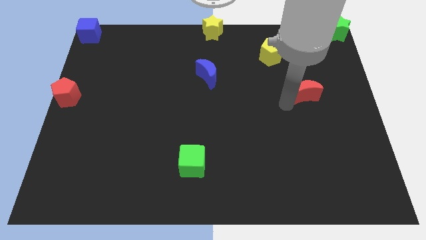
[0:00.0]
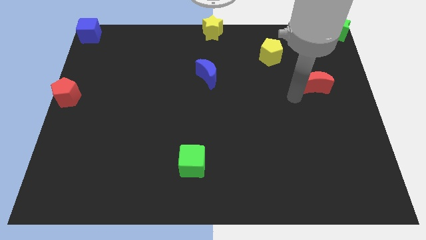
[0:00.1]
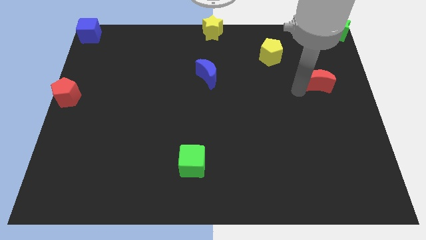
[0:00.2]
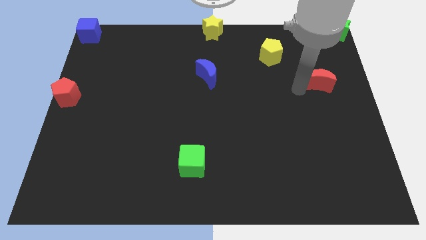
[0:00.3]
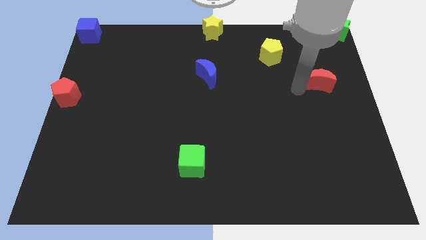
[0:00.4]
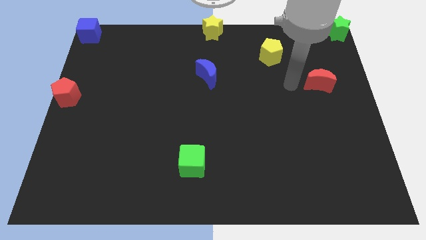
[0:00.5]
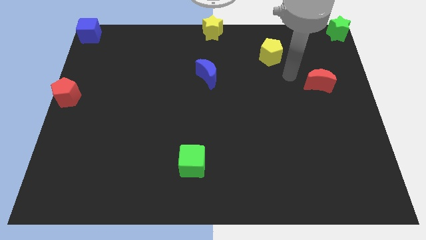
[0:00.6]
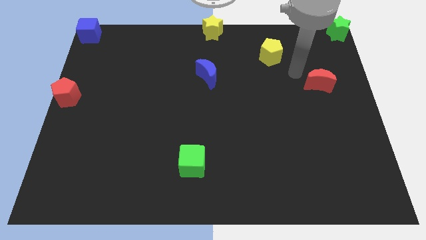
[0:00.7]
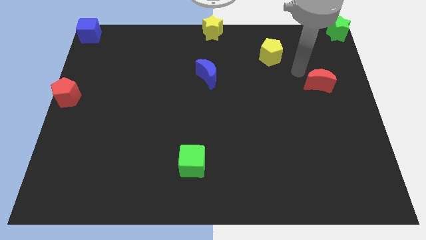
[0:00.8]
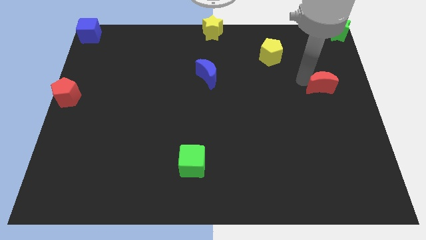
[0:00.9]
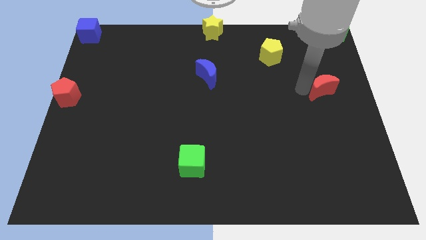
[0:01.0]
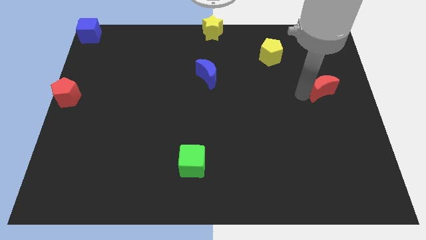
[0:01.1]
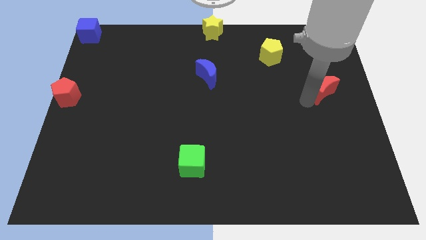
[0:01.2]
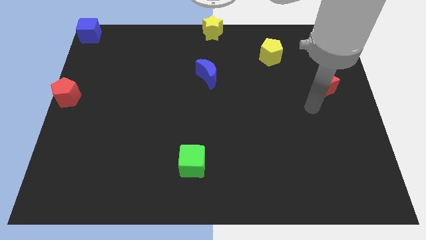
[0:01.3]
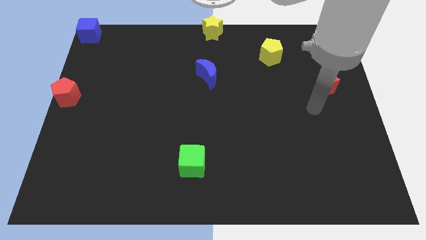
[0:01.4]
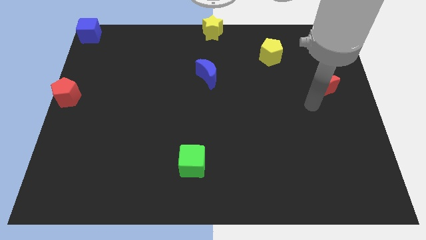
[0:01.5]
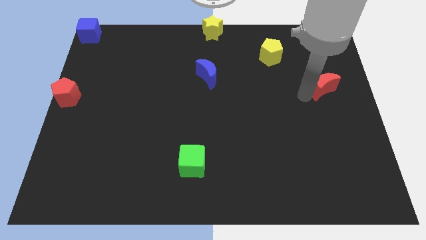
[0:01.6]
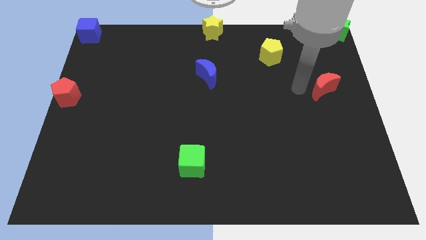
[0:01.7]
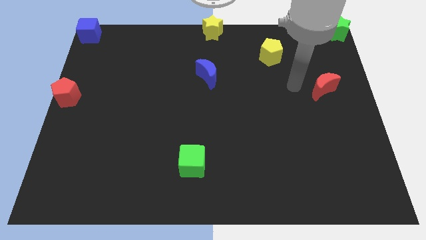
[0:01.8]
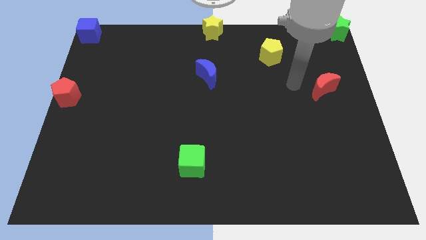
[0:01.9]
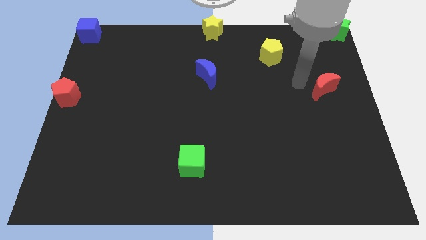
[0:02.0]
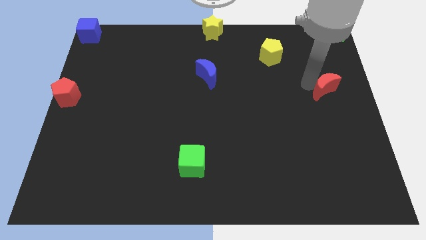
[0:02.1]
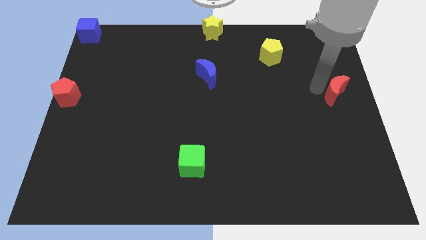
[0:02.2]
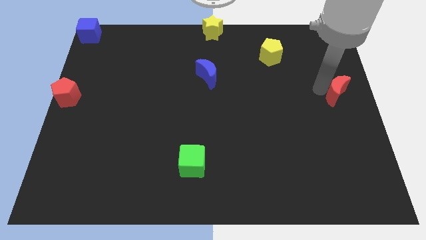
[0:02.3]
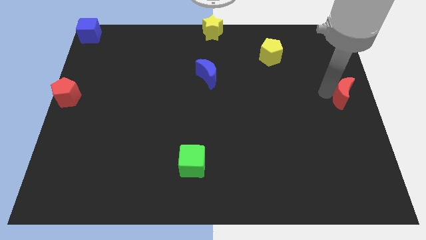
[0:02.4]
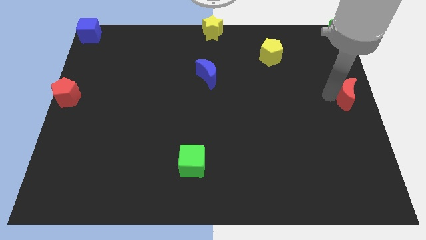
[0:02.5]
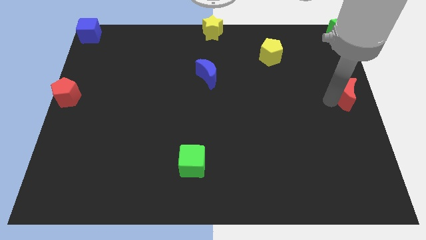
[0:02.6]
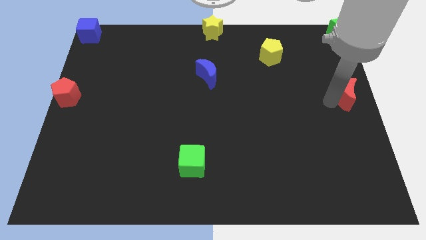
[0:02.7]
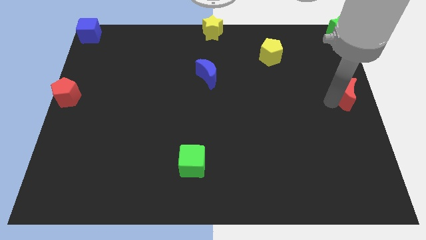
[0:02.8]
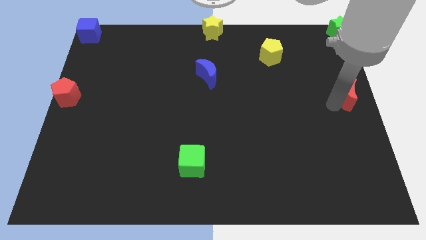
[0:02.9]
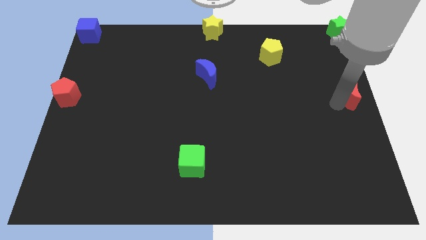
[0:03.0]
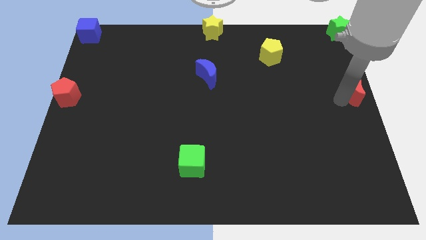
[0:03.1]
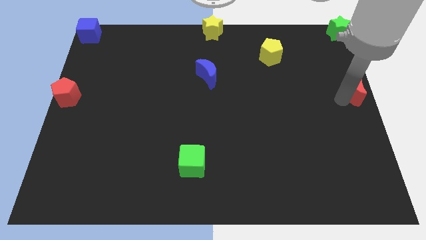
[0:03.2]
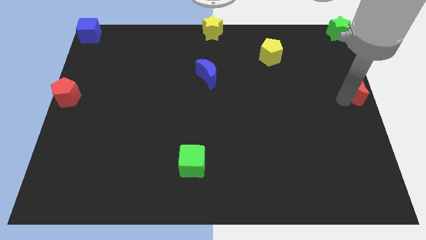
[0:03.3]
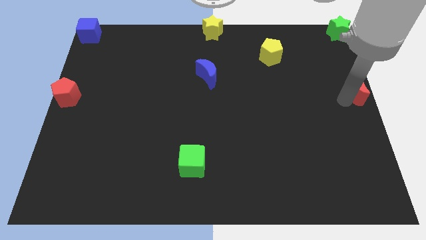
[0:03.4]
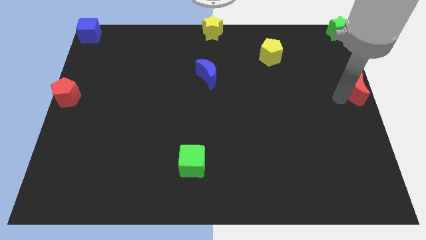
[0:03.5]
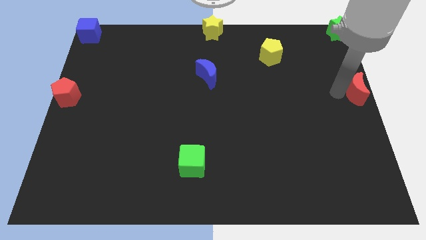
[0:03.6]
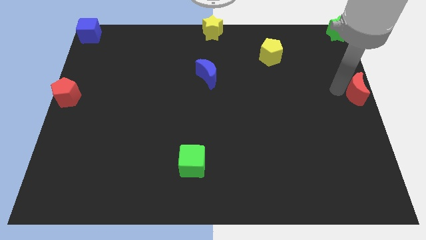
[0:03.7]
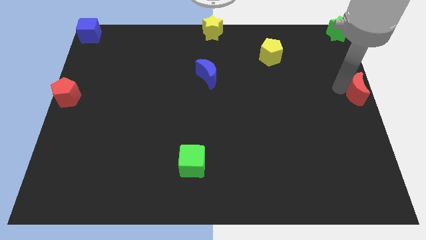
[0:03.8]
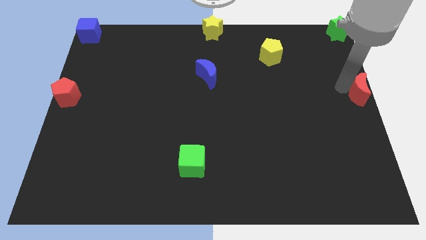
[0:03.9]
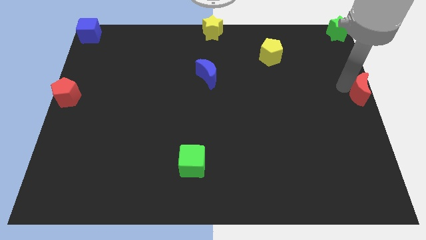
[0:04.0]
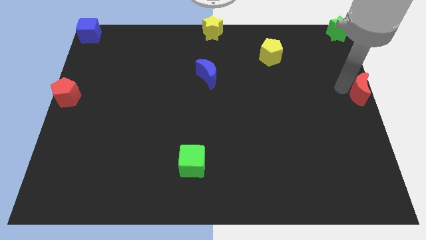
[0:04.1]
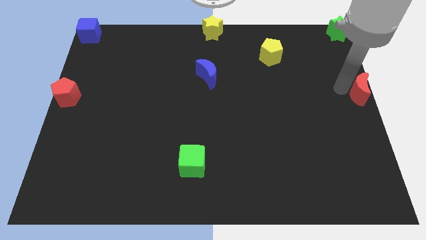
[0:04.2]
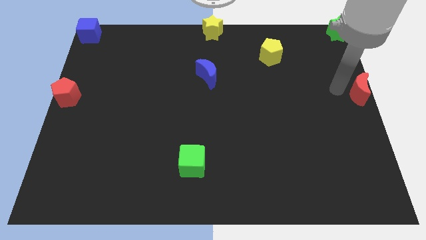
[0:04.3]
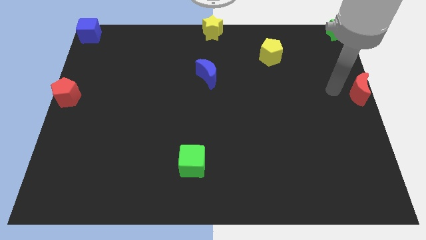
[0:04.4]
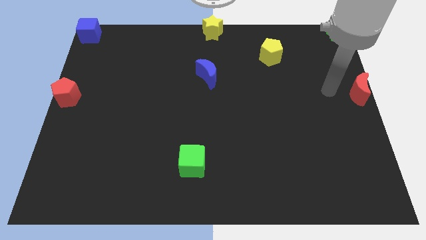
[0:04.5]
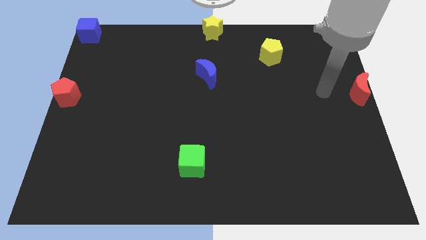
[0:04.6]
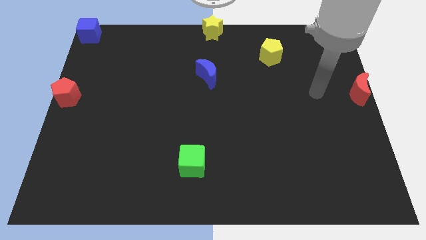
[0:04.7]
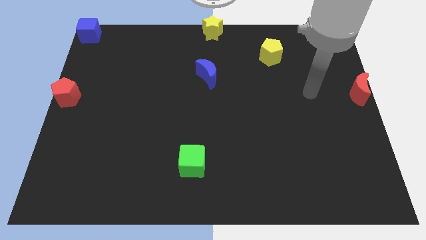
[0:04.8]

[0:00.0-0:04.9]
place red crescent to the right center of the board

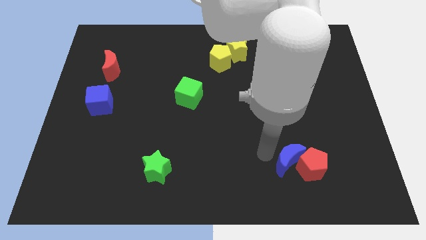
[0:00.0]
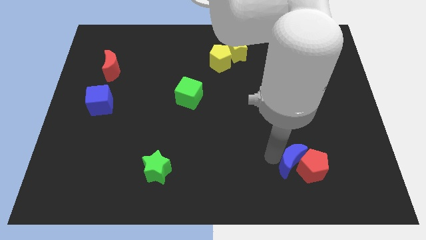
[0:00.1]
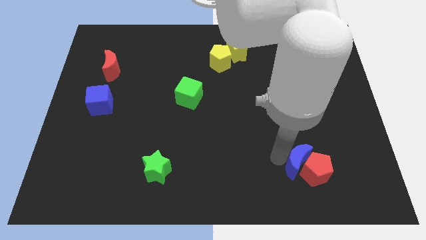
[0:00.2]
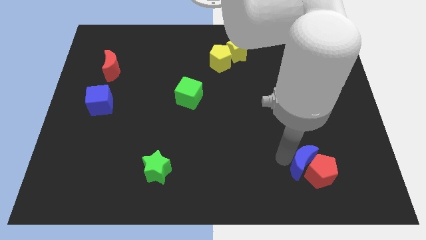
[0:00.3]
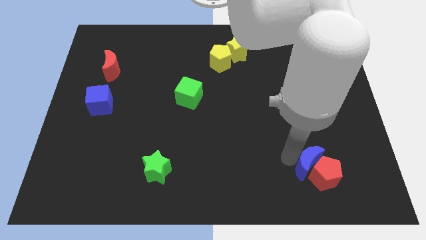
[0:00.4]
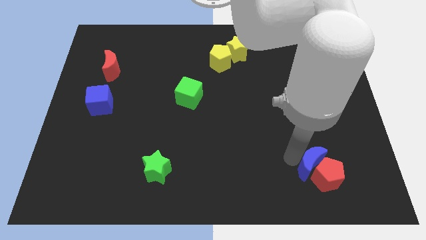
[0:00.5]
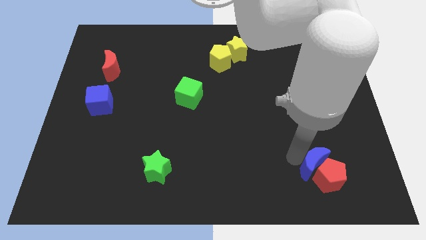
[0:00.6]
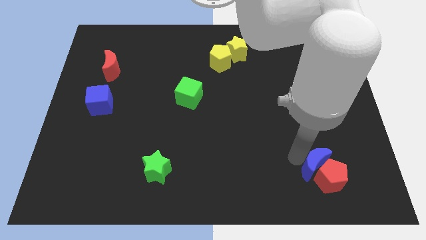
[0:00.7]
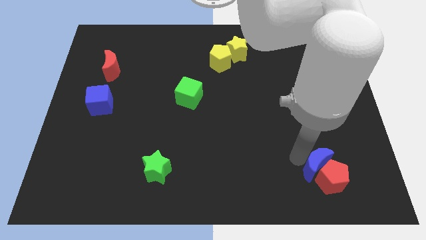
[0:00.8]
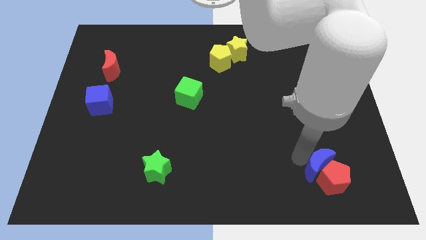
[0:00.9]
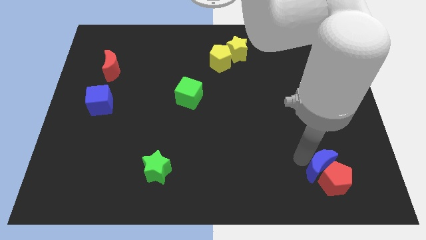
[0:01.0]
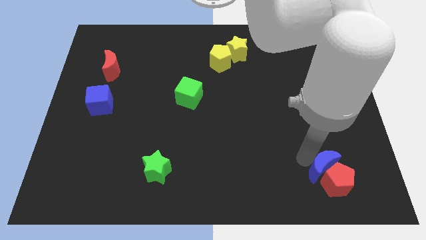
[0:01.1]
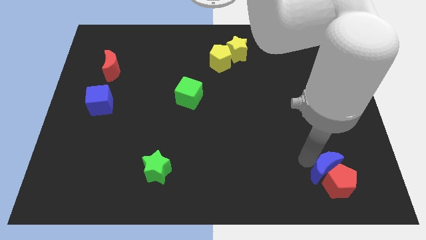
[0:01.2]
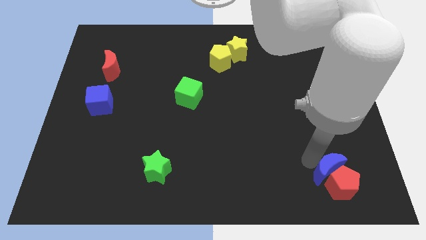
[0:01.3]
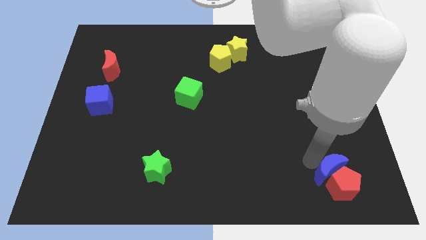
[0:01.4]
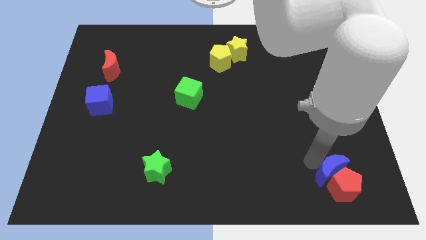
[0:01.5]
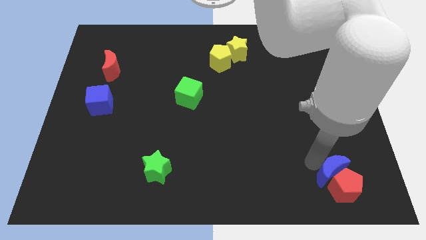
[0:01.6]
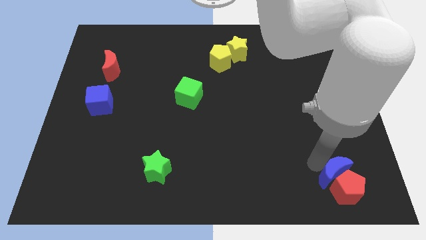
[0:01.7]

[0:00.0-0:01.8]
move the red pentagon with the blue crescent

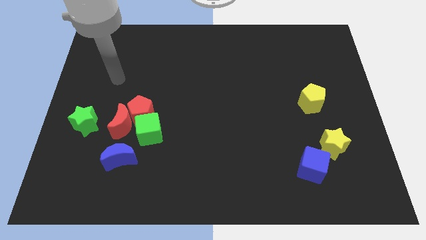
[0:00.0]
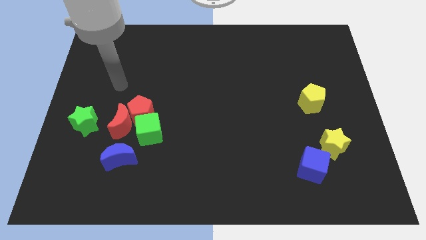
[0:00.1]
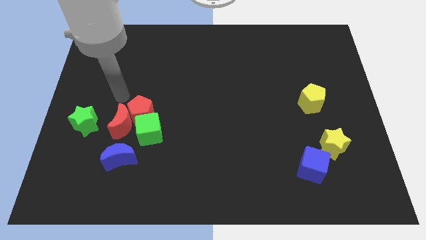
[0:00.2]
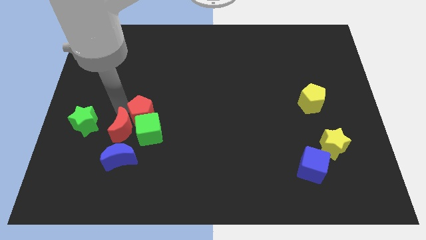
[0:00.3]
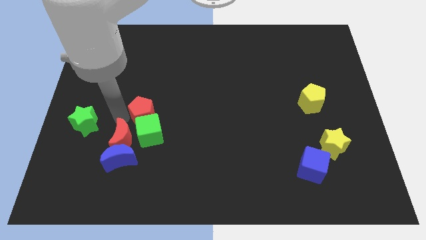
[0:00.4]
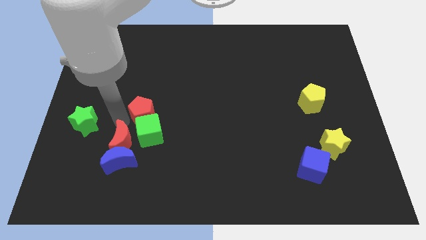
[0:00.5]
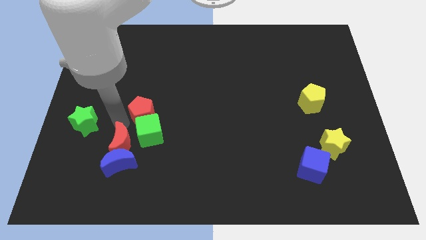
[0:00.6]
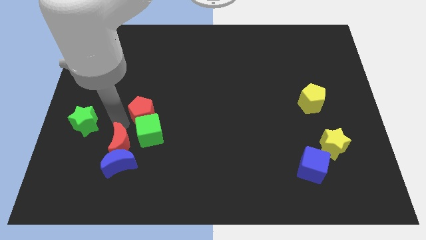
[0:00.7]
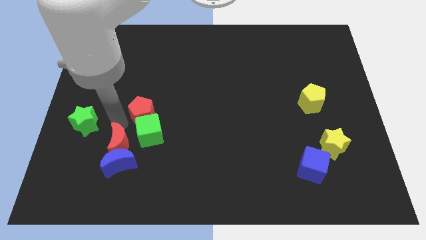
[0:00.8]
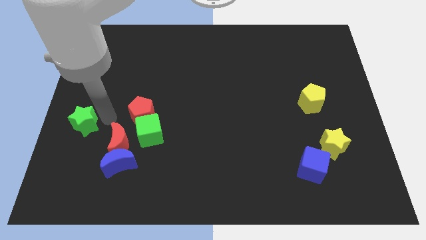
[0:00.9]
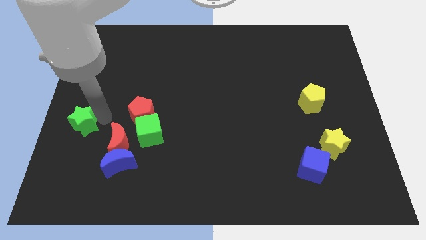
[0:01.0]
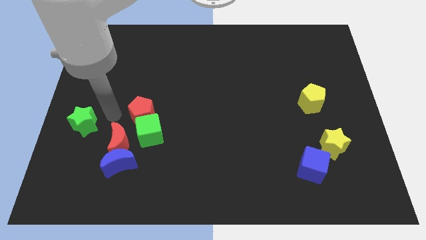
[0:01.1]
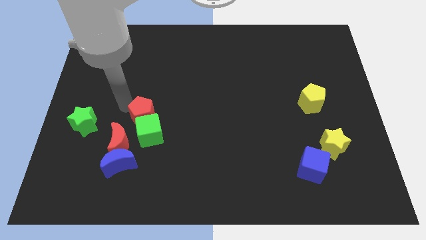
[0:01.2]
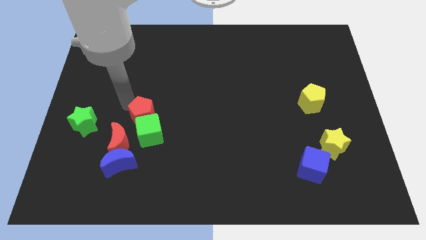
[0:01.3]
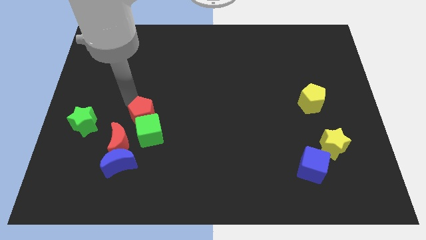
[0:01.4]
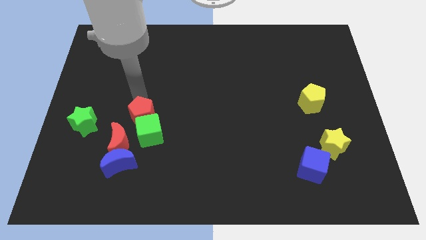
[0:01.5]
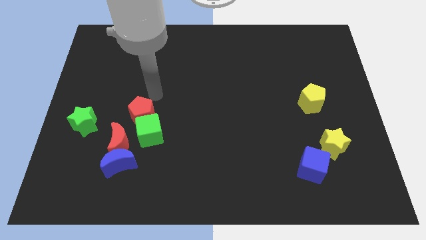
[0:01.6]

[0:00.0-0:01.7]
push the red crescent into the blue crescent

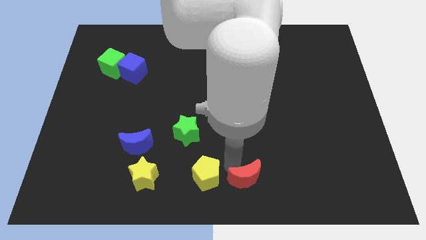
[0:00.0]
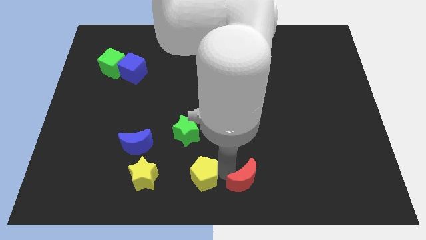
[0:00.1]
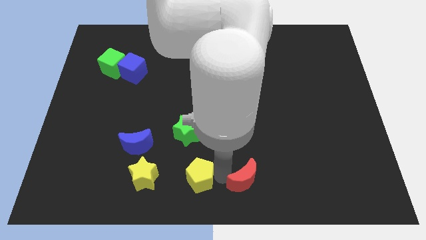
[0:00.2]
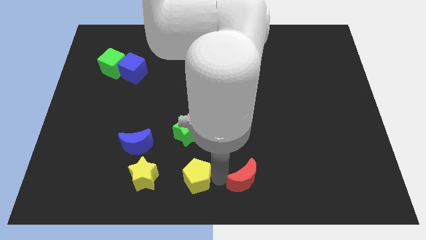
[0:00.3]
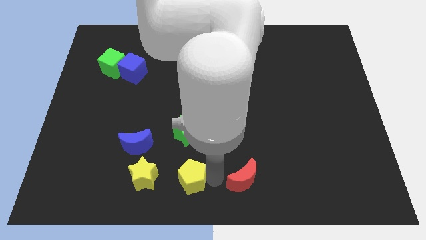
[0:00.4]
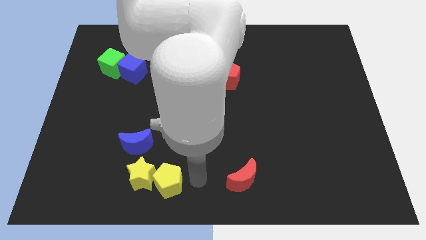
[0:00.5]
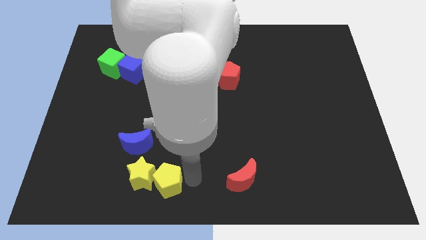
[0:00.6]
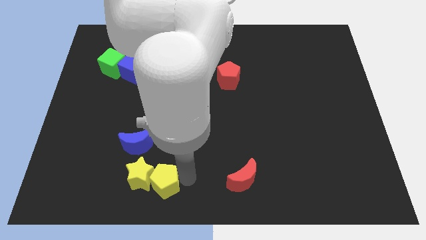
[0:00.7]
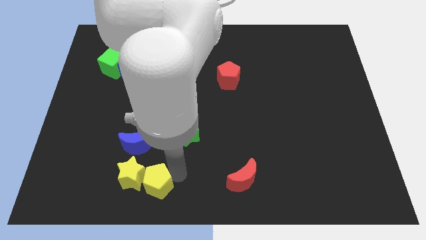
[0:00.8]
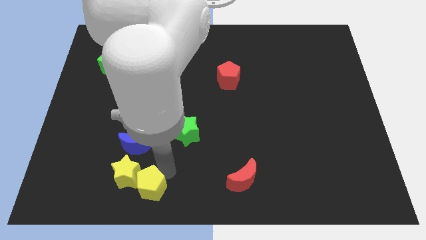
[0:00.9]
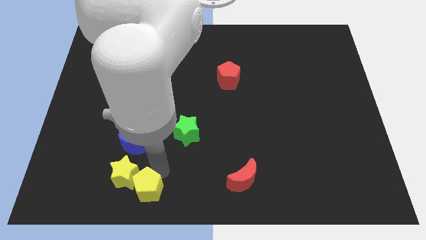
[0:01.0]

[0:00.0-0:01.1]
move yellow pentagon into yellow star
